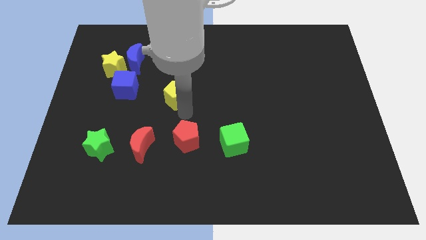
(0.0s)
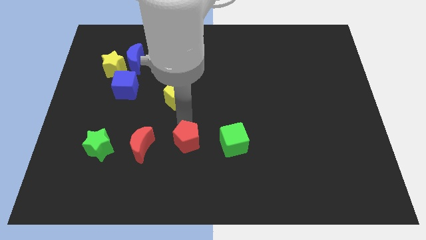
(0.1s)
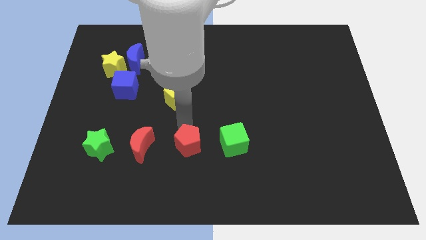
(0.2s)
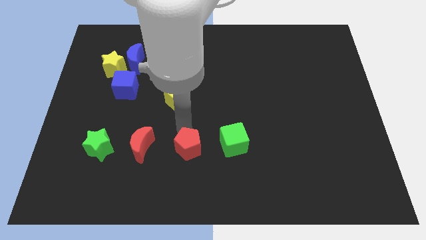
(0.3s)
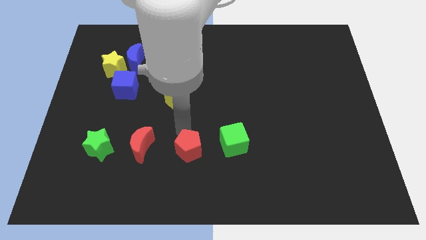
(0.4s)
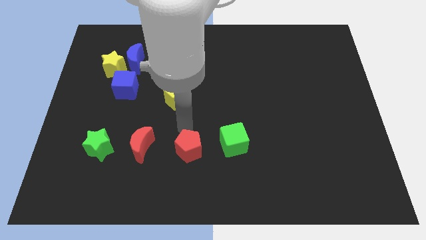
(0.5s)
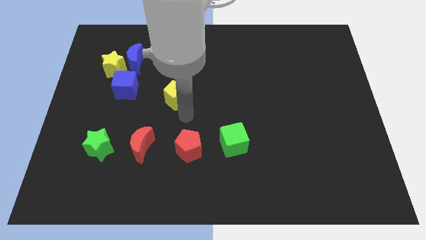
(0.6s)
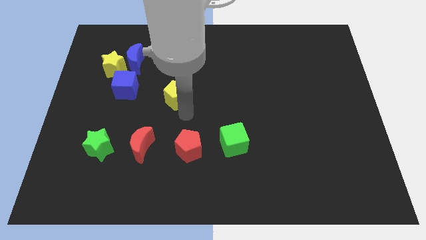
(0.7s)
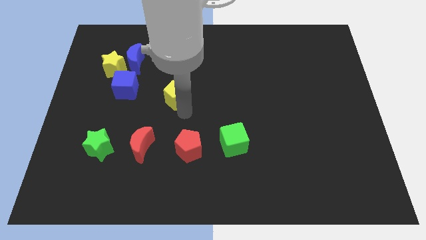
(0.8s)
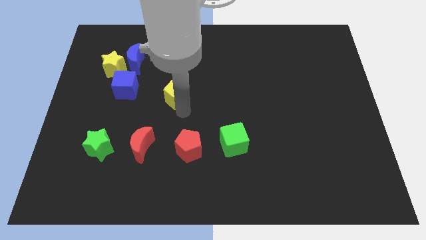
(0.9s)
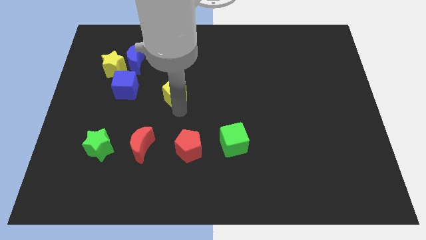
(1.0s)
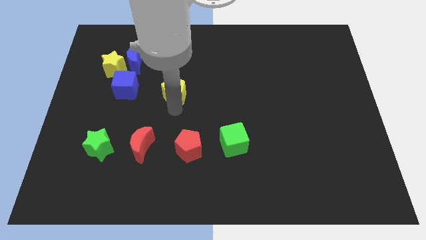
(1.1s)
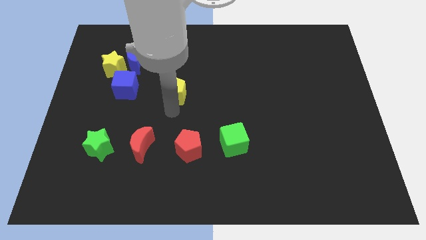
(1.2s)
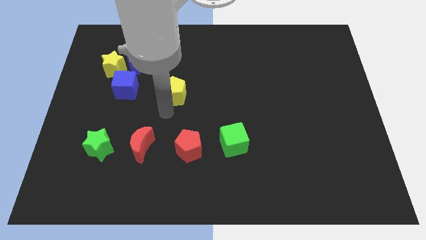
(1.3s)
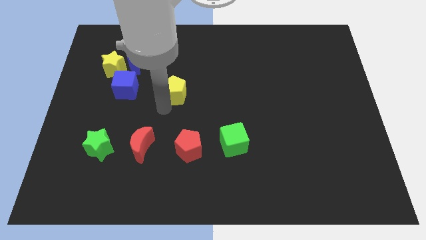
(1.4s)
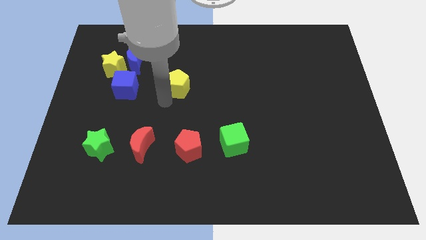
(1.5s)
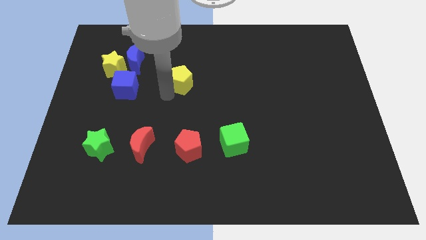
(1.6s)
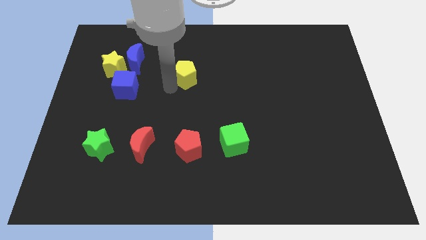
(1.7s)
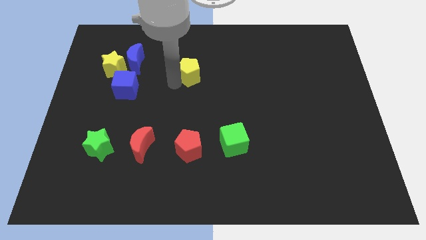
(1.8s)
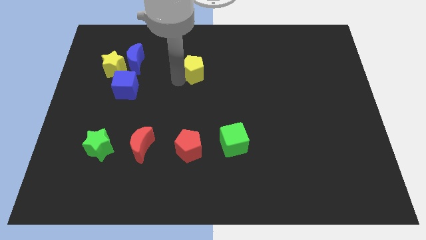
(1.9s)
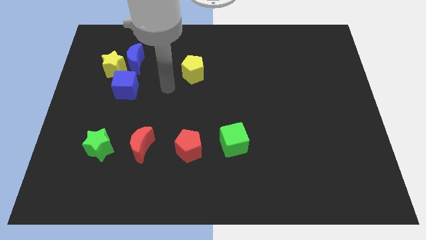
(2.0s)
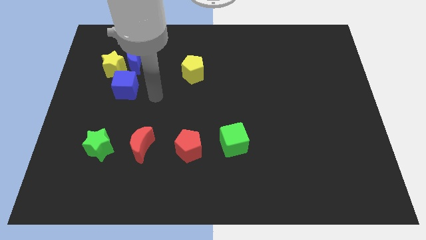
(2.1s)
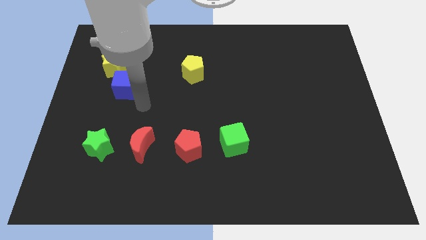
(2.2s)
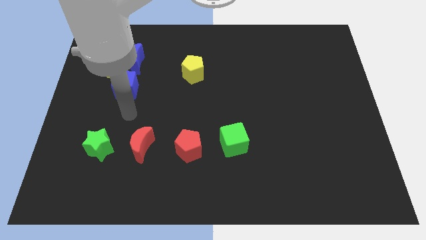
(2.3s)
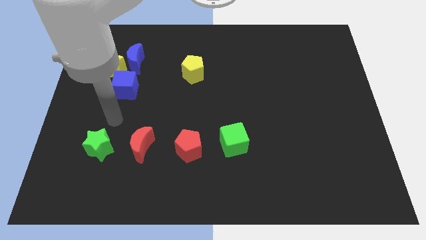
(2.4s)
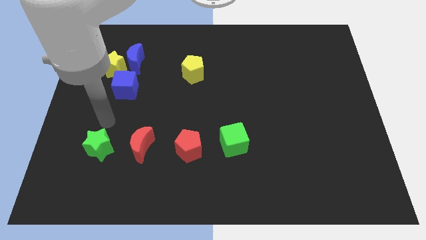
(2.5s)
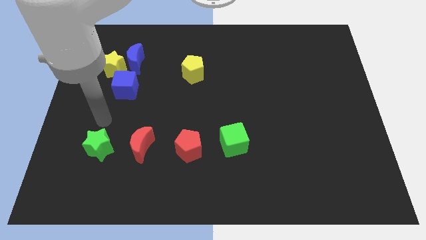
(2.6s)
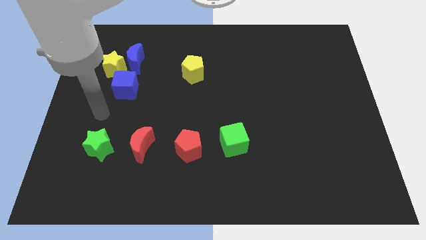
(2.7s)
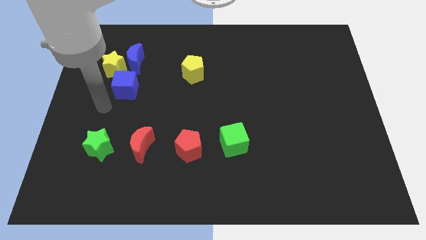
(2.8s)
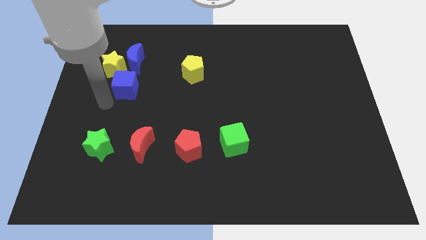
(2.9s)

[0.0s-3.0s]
place the yellow pentagon to the right of the blue crescent

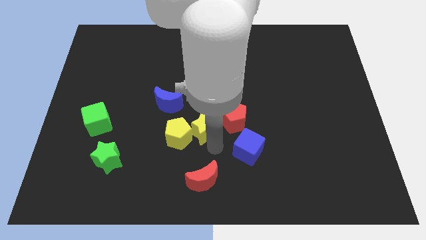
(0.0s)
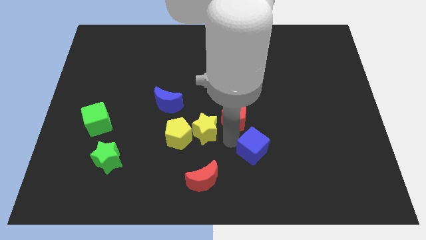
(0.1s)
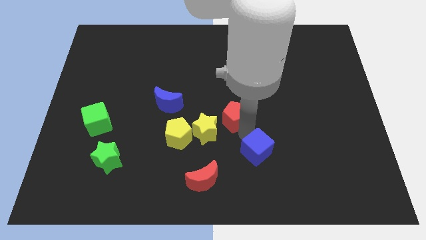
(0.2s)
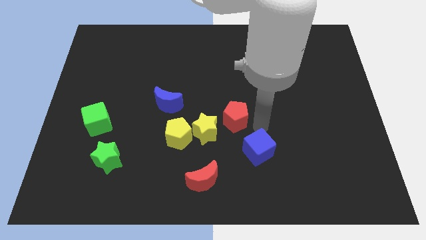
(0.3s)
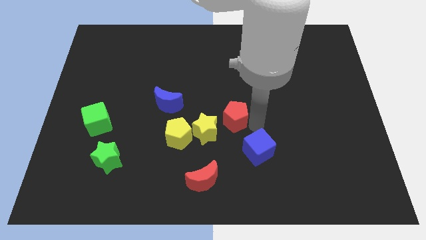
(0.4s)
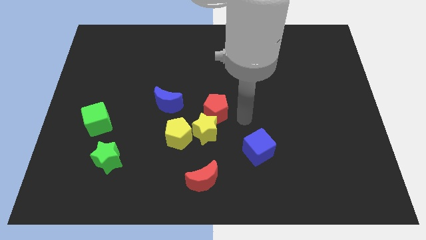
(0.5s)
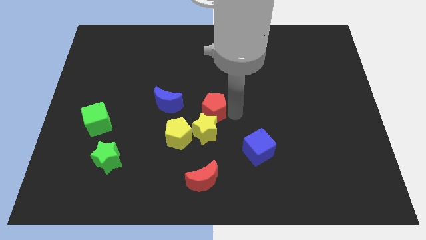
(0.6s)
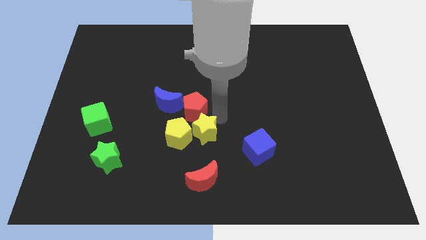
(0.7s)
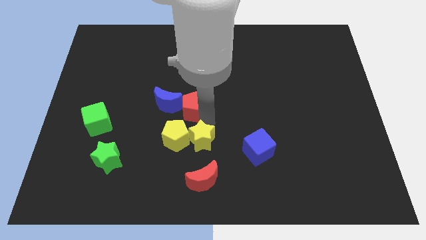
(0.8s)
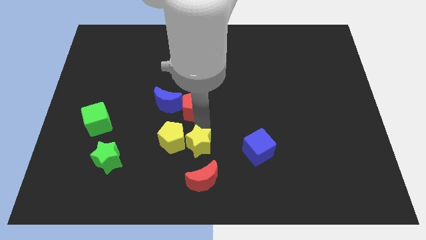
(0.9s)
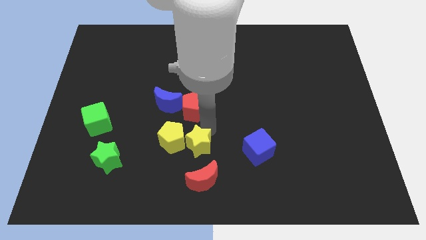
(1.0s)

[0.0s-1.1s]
push the red pentagon into the blue moon

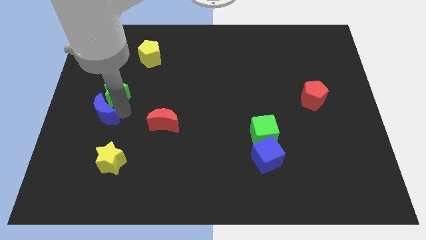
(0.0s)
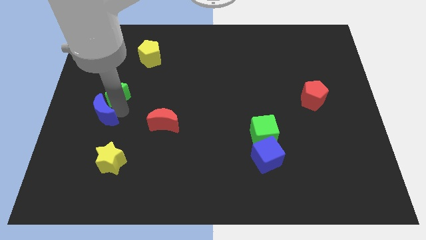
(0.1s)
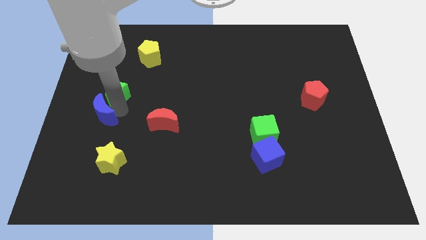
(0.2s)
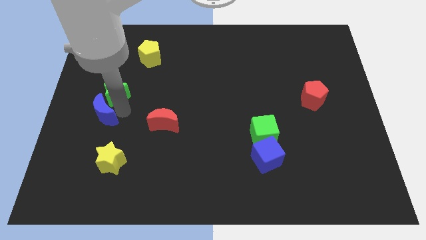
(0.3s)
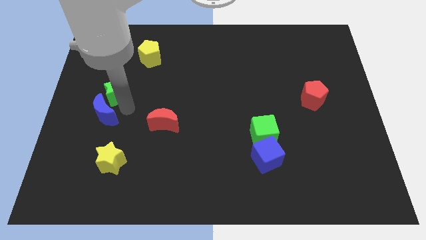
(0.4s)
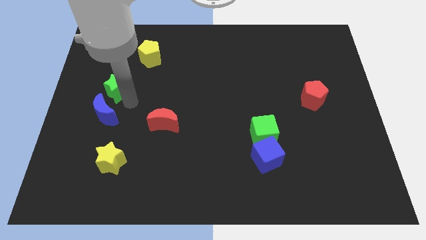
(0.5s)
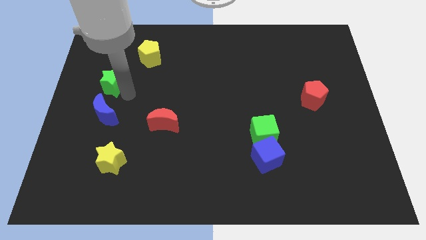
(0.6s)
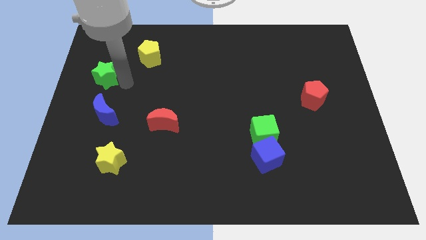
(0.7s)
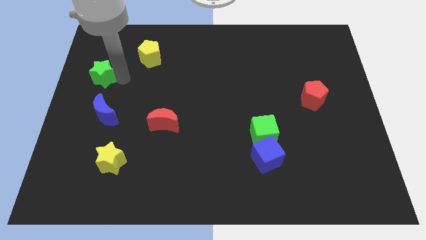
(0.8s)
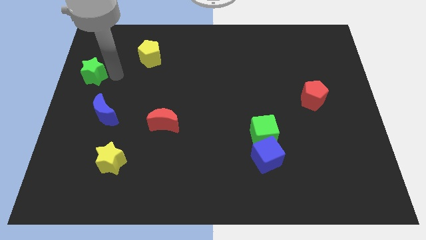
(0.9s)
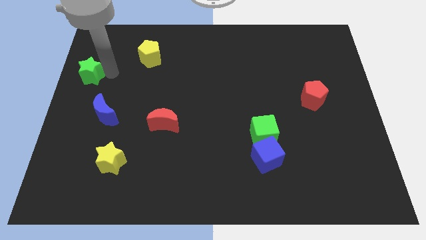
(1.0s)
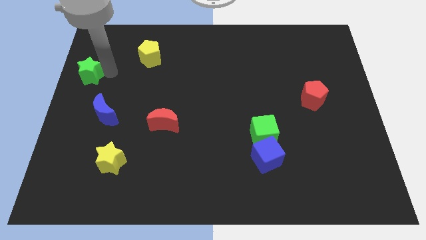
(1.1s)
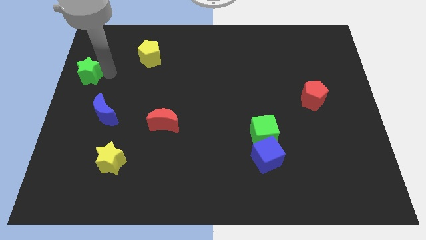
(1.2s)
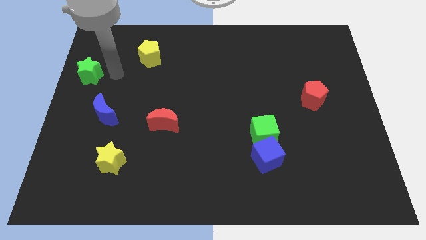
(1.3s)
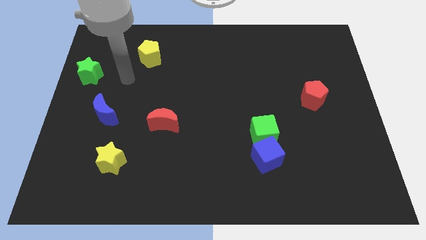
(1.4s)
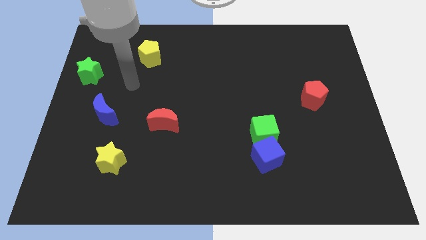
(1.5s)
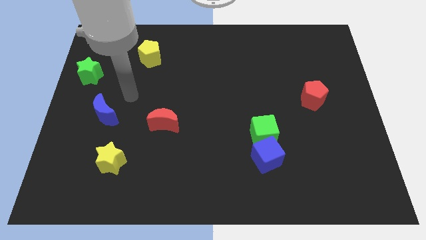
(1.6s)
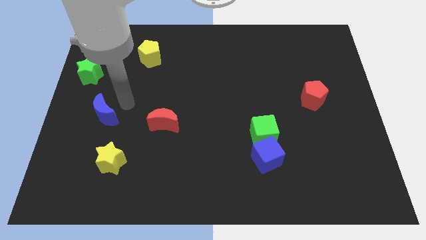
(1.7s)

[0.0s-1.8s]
separate the green star from the blue crescent

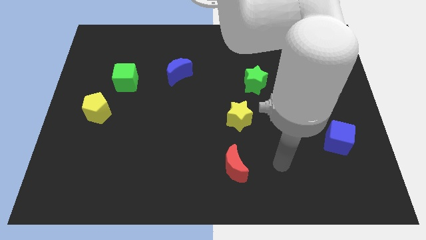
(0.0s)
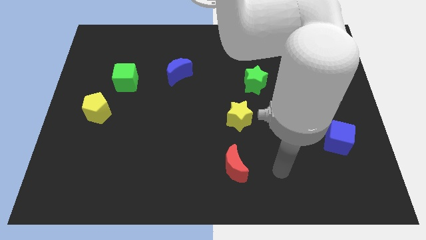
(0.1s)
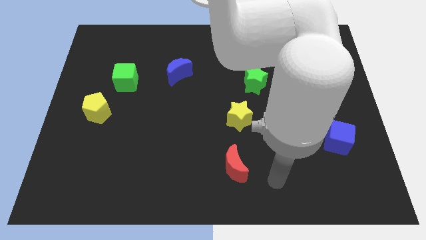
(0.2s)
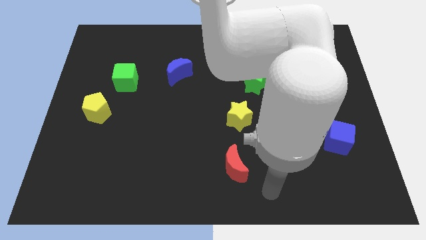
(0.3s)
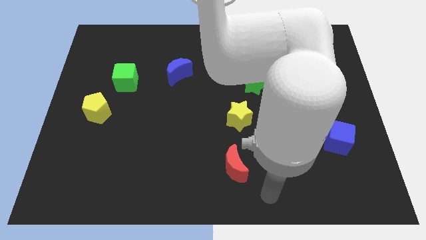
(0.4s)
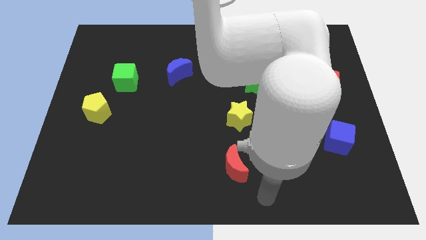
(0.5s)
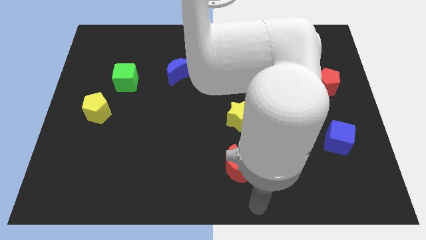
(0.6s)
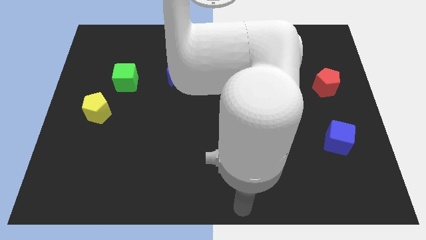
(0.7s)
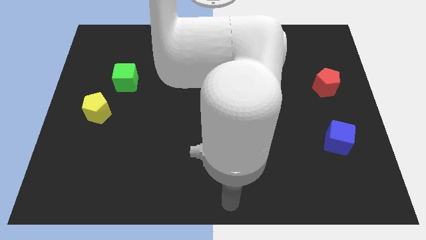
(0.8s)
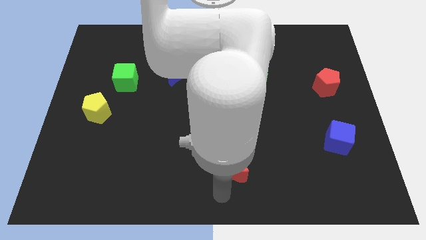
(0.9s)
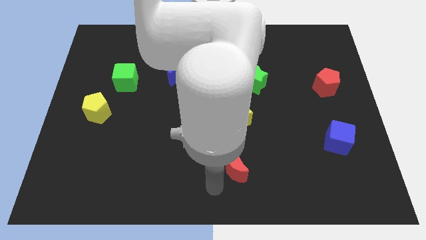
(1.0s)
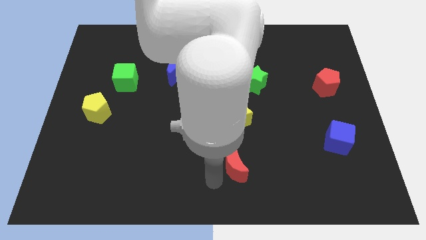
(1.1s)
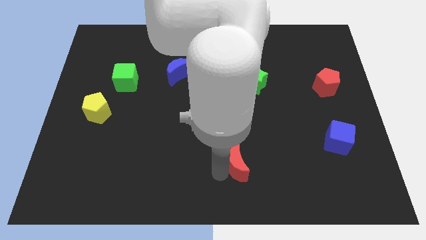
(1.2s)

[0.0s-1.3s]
move your arm to the left side of the red moon

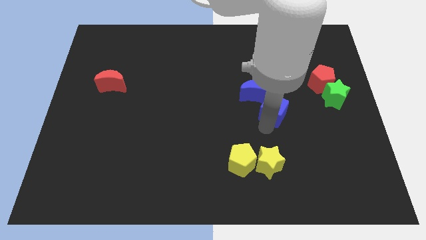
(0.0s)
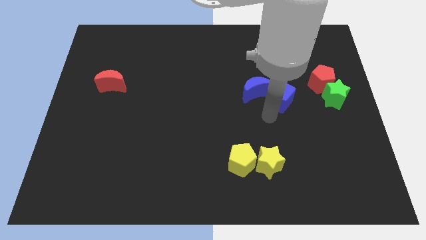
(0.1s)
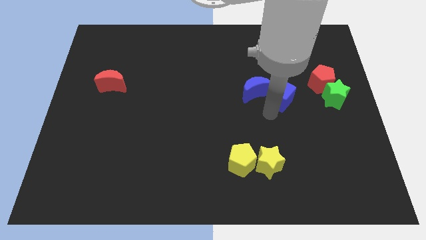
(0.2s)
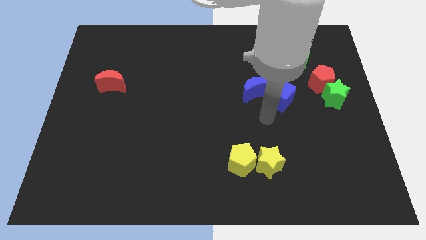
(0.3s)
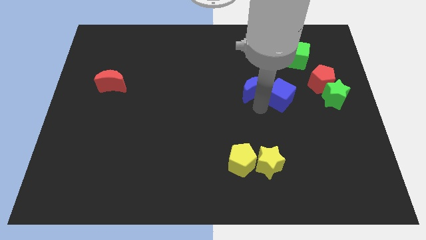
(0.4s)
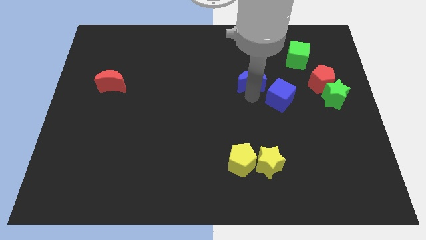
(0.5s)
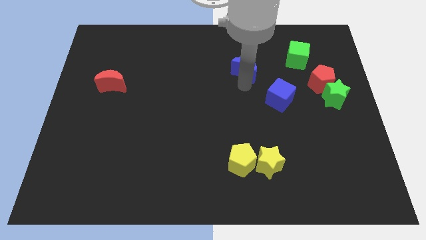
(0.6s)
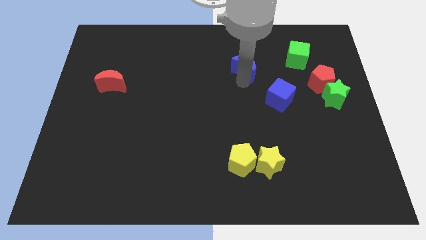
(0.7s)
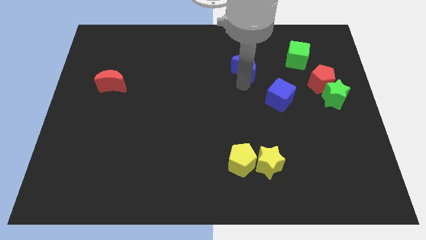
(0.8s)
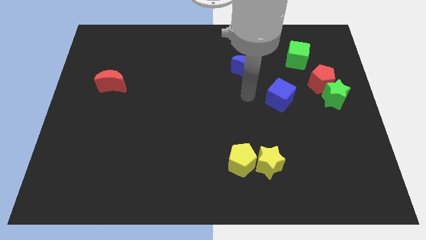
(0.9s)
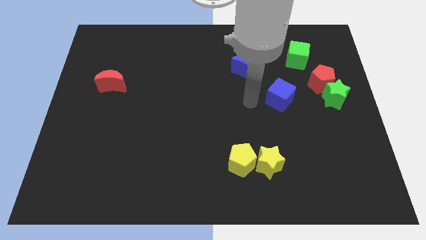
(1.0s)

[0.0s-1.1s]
separate blue cube from the blue moon

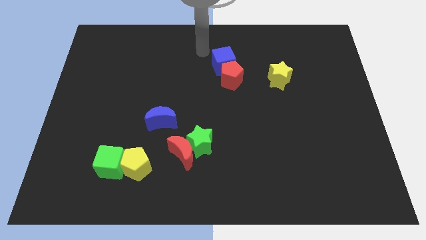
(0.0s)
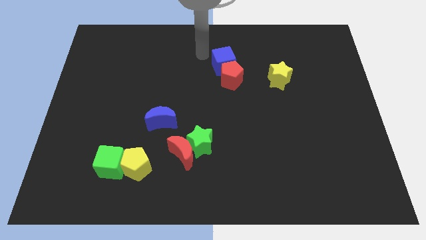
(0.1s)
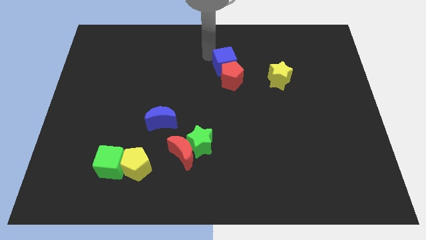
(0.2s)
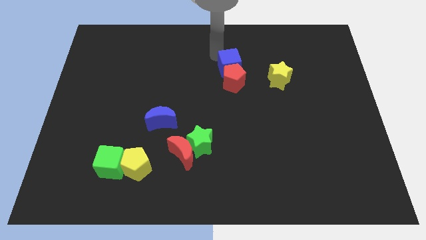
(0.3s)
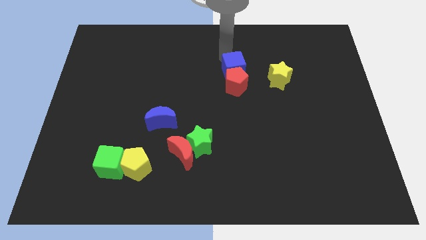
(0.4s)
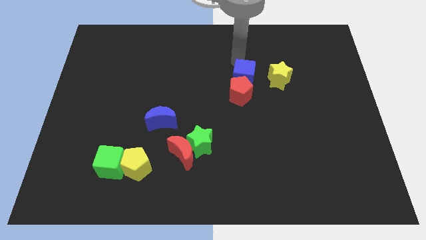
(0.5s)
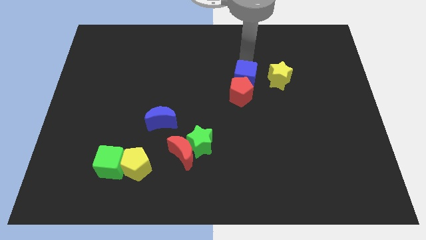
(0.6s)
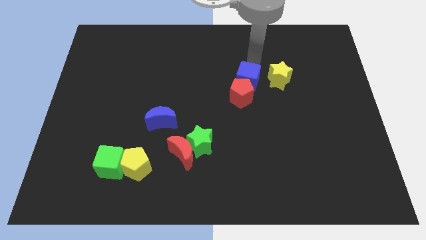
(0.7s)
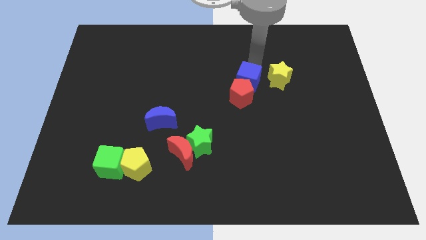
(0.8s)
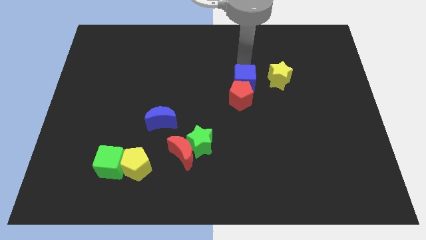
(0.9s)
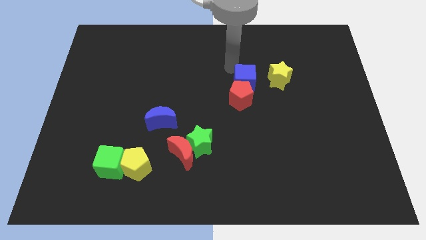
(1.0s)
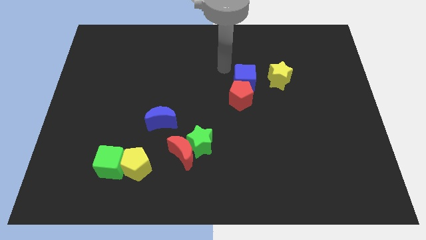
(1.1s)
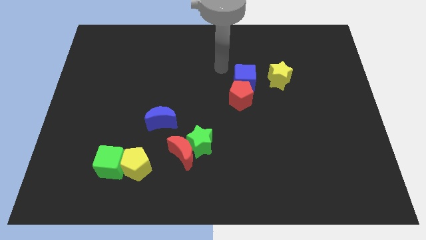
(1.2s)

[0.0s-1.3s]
move the blue cube along with the red pentagon slightly to the bottom
